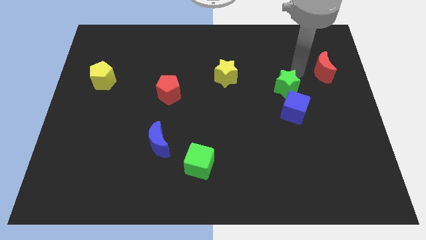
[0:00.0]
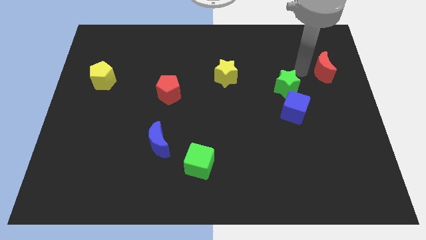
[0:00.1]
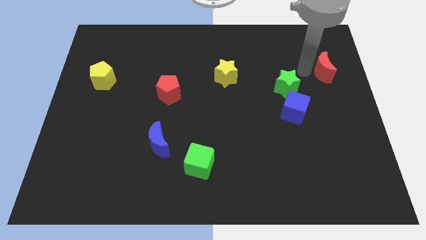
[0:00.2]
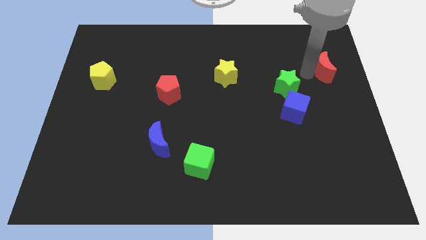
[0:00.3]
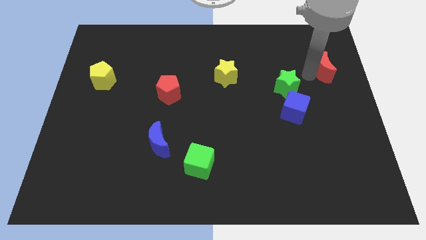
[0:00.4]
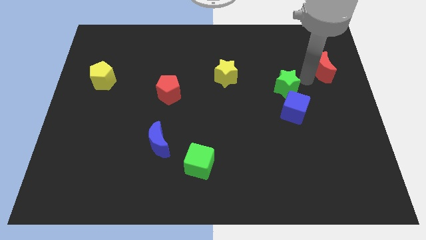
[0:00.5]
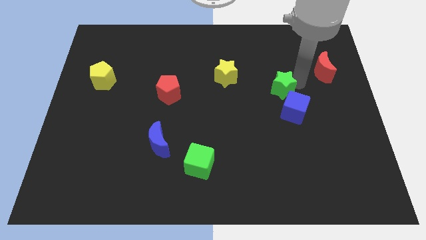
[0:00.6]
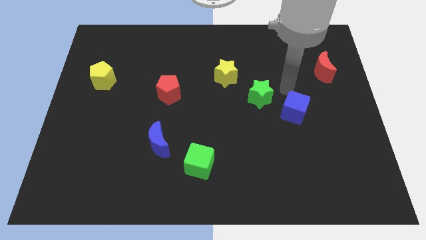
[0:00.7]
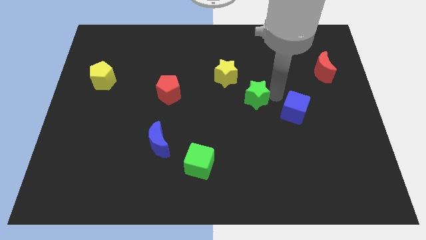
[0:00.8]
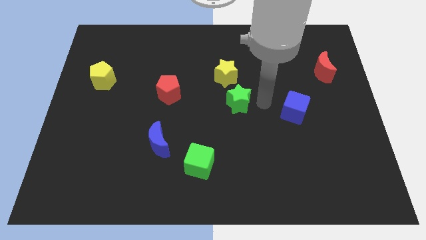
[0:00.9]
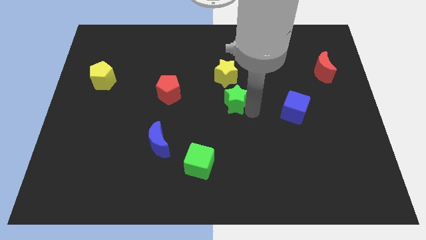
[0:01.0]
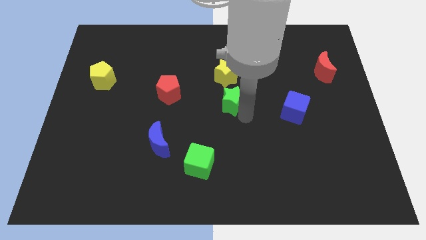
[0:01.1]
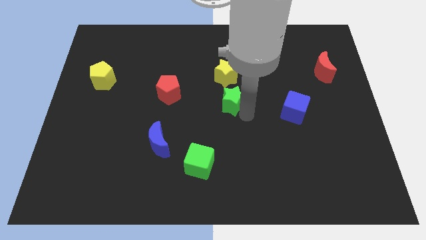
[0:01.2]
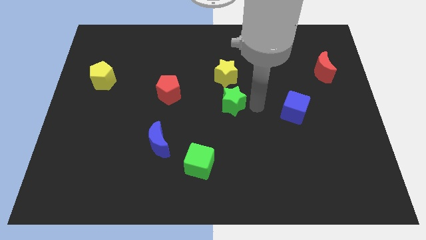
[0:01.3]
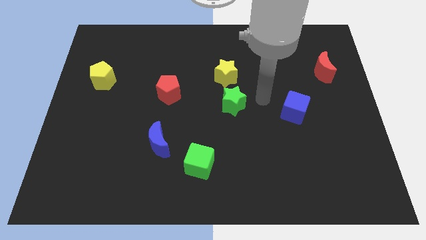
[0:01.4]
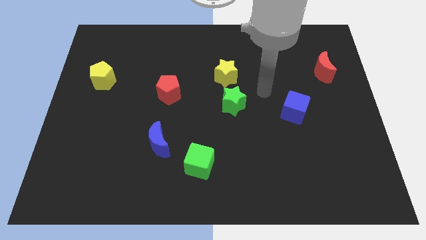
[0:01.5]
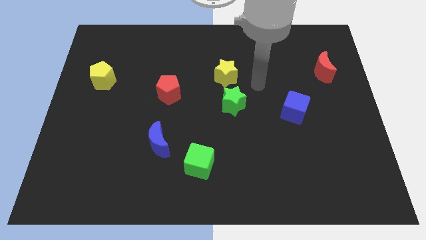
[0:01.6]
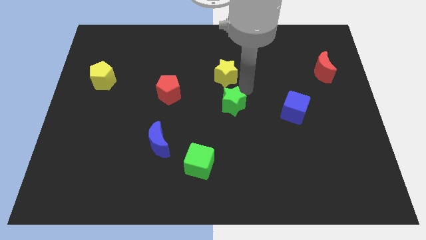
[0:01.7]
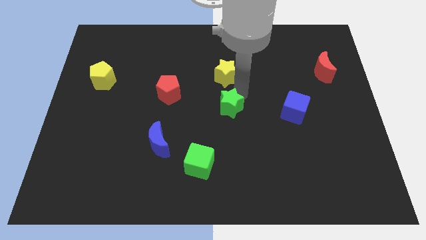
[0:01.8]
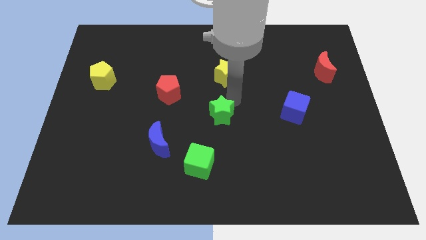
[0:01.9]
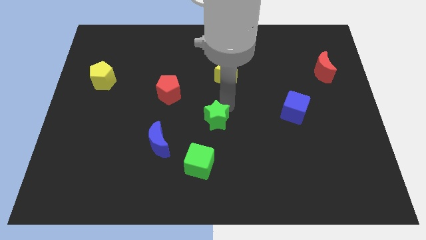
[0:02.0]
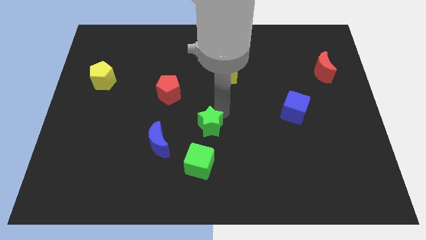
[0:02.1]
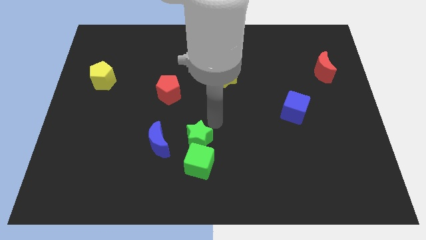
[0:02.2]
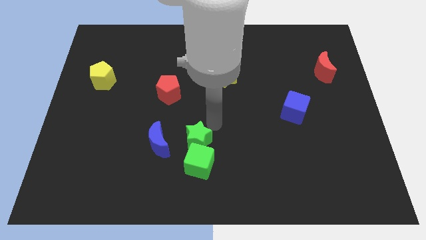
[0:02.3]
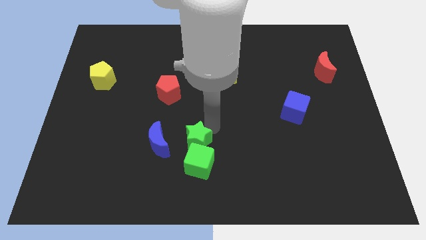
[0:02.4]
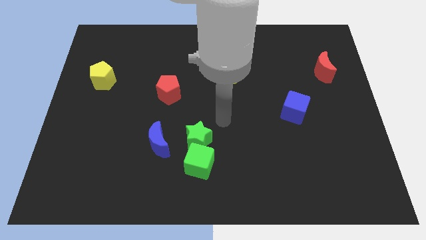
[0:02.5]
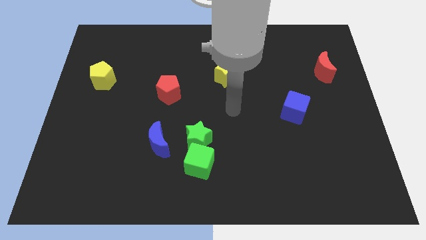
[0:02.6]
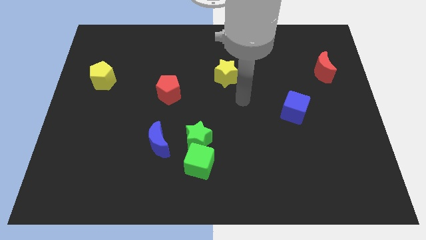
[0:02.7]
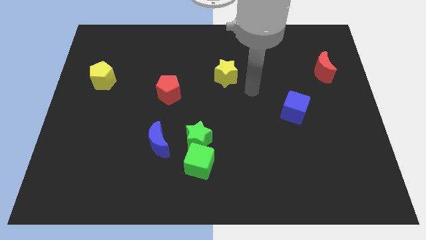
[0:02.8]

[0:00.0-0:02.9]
place the green star to the top side of the green cube

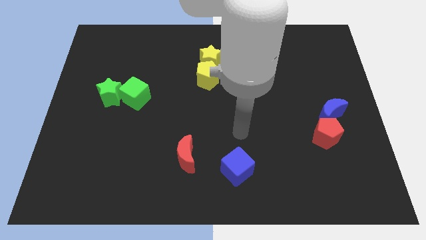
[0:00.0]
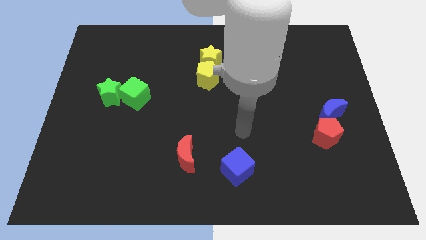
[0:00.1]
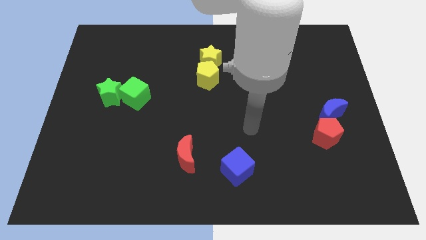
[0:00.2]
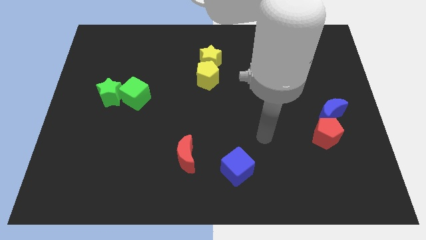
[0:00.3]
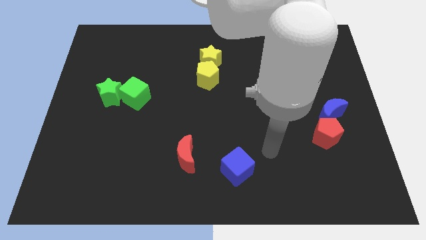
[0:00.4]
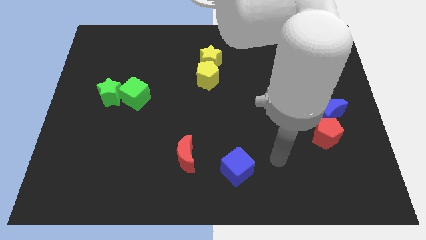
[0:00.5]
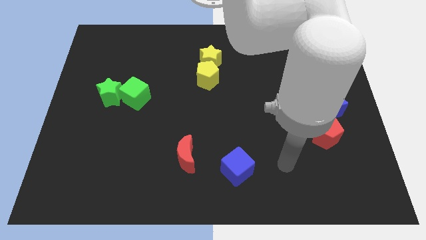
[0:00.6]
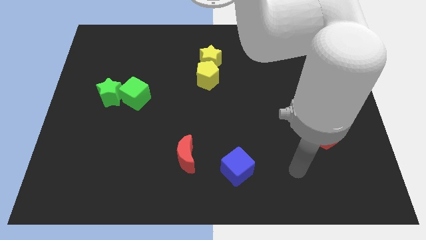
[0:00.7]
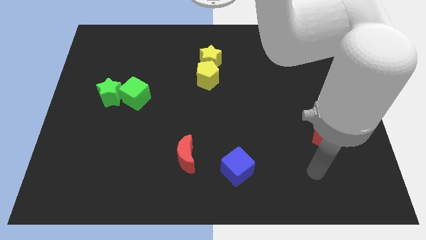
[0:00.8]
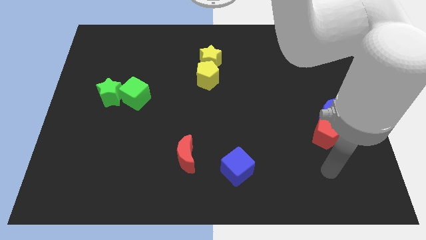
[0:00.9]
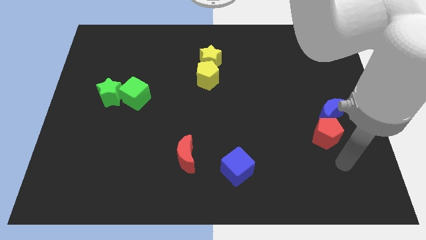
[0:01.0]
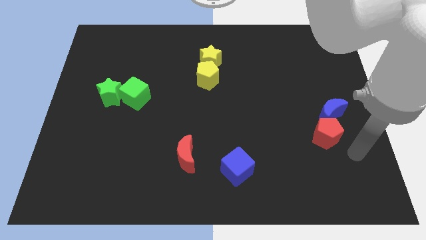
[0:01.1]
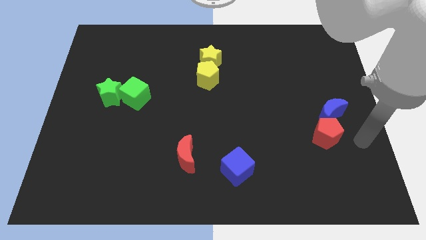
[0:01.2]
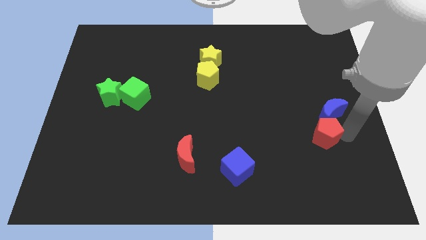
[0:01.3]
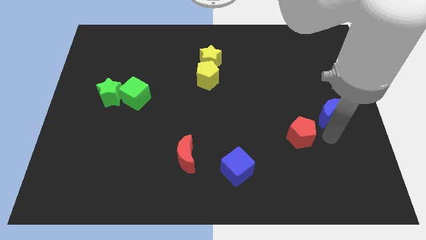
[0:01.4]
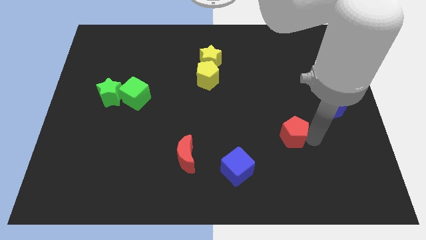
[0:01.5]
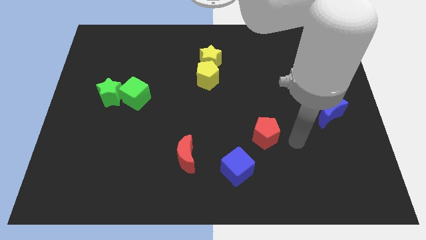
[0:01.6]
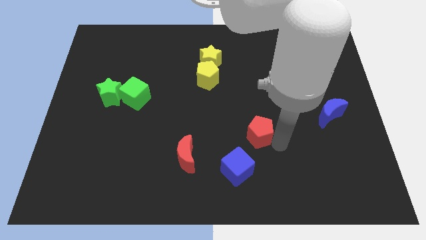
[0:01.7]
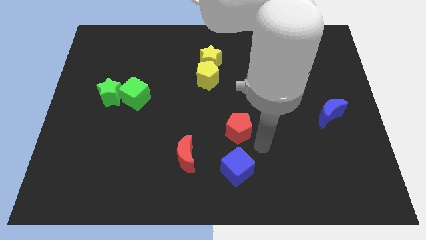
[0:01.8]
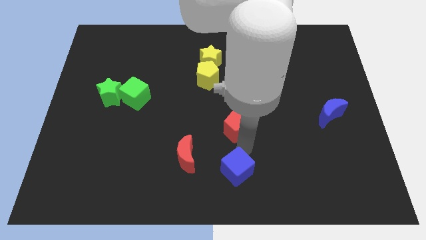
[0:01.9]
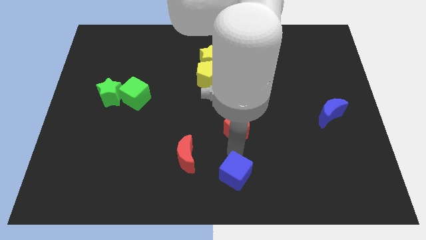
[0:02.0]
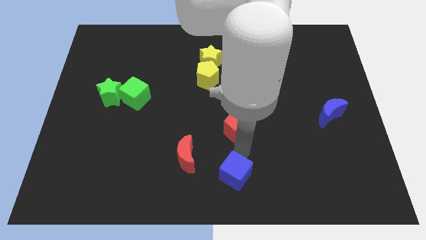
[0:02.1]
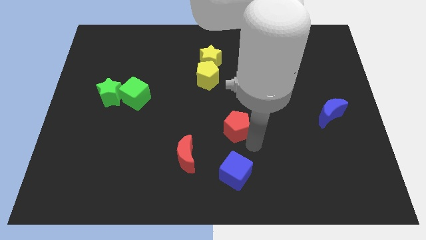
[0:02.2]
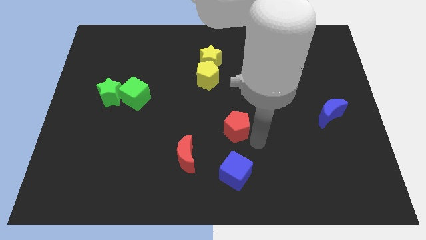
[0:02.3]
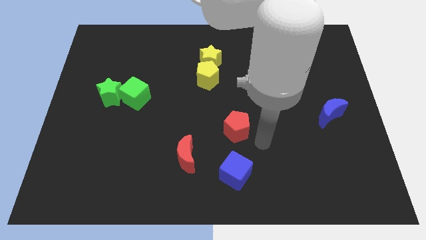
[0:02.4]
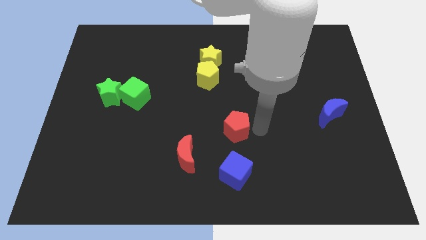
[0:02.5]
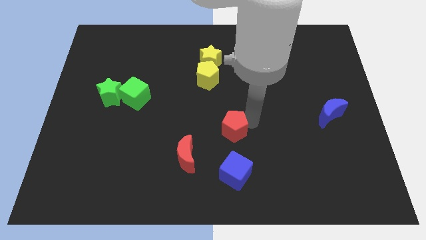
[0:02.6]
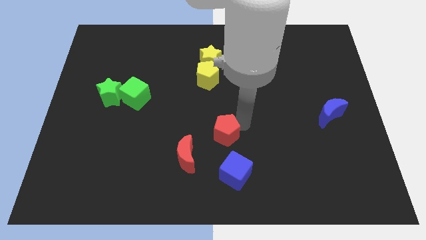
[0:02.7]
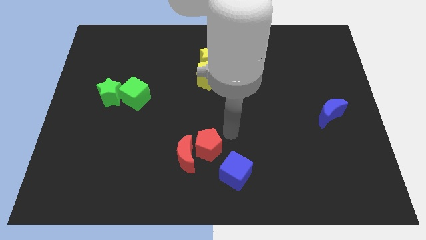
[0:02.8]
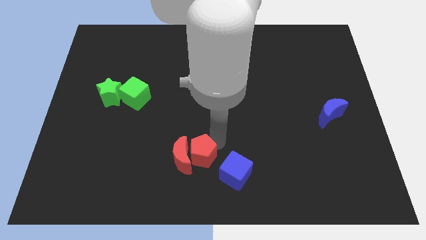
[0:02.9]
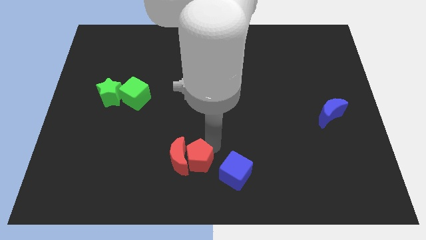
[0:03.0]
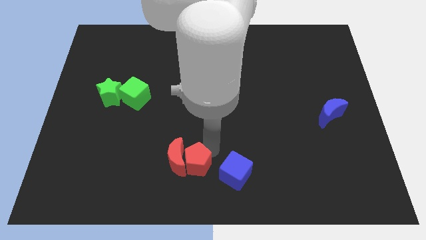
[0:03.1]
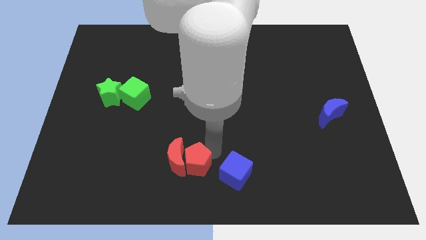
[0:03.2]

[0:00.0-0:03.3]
push the red pentagon into the red crescent

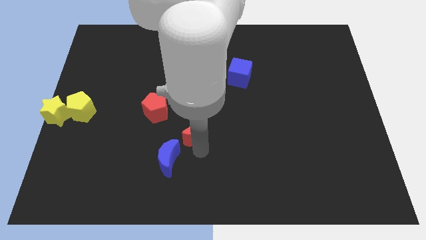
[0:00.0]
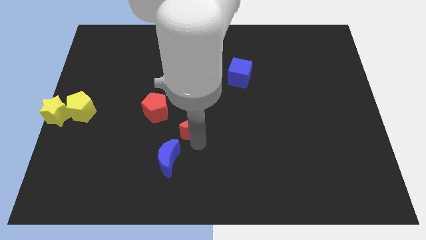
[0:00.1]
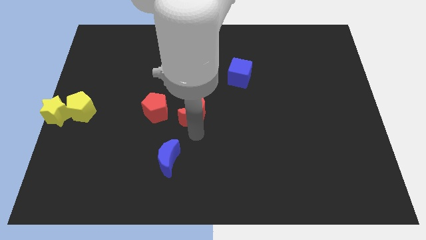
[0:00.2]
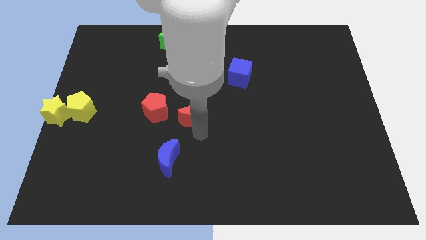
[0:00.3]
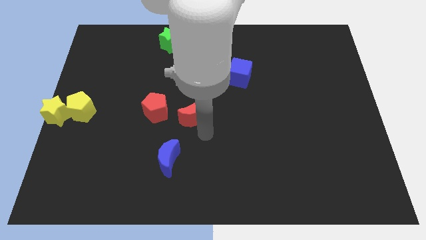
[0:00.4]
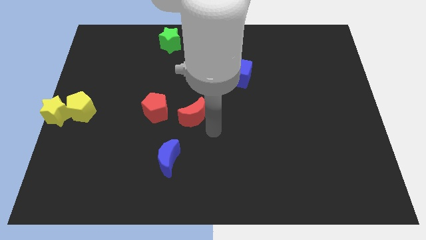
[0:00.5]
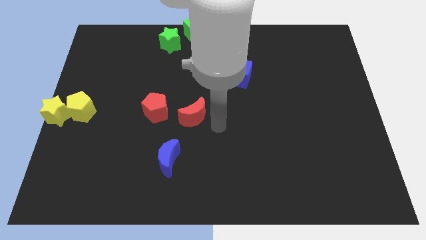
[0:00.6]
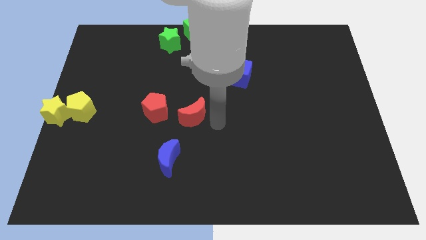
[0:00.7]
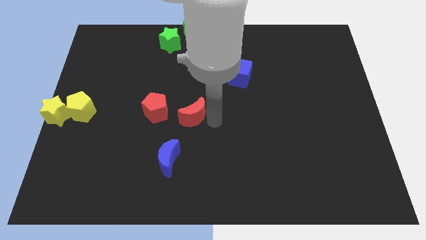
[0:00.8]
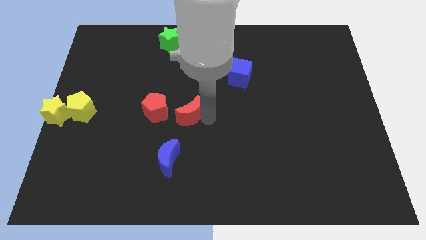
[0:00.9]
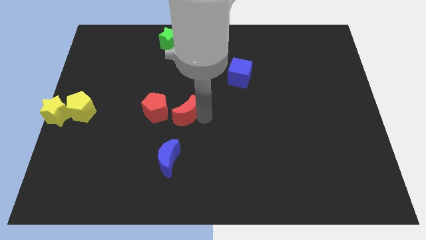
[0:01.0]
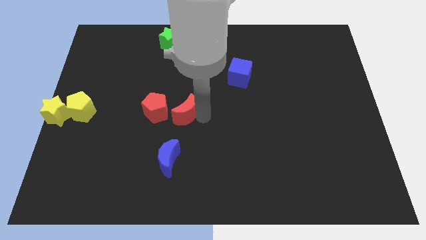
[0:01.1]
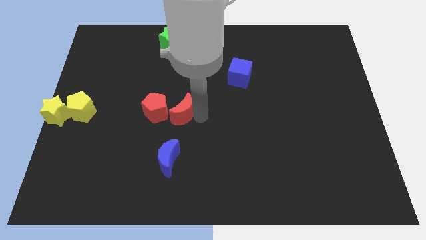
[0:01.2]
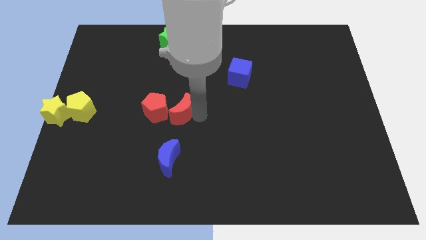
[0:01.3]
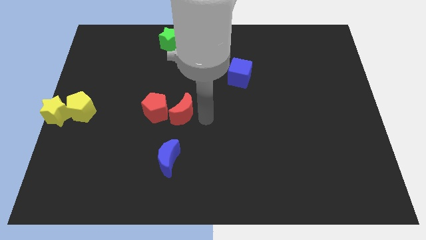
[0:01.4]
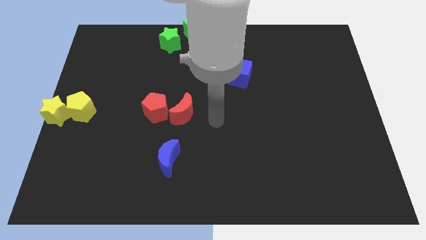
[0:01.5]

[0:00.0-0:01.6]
move the red moon close to the red pentagon

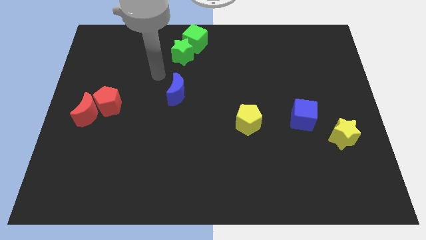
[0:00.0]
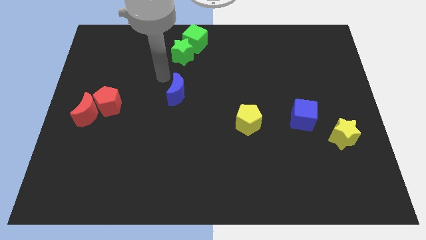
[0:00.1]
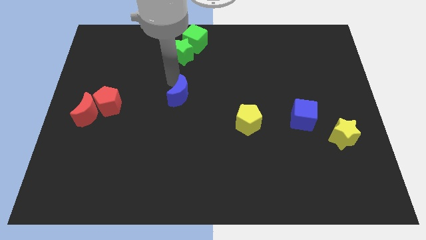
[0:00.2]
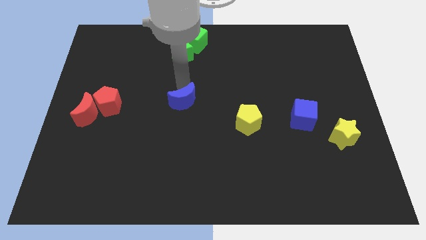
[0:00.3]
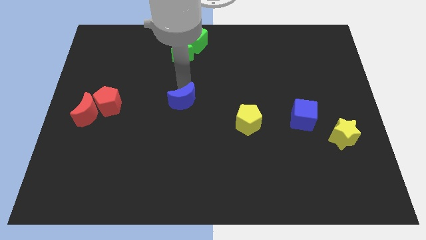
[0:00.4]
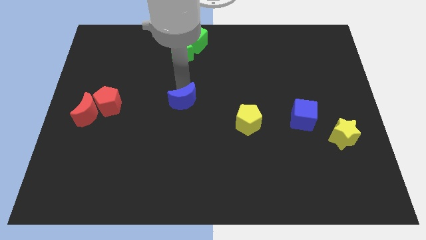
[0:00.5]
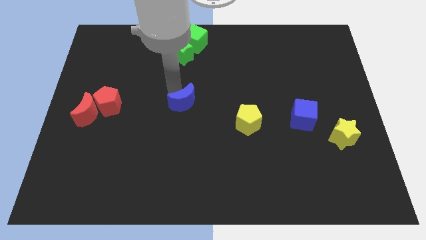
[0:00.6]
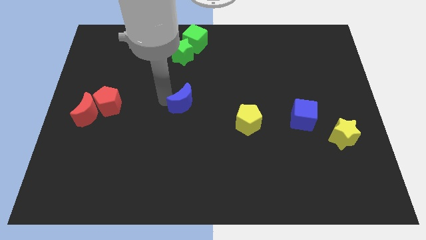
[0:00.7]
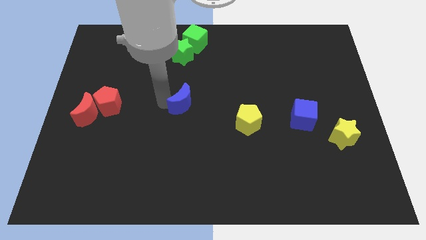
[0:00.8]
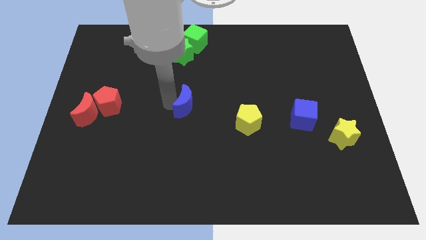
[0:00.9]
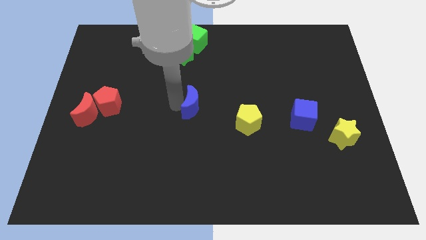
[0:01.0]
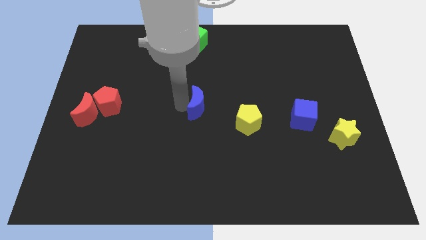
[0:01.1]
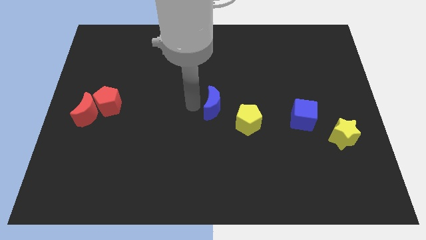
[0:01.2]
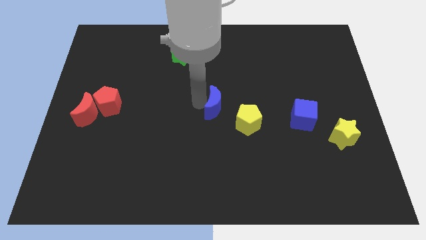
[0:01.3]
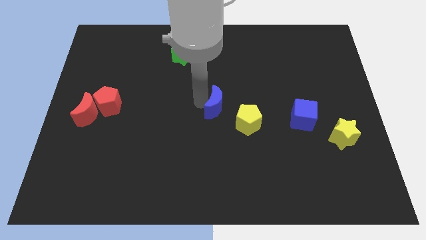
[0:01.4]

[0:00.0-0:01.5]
push the blue crescent slightly to the right
